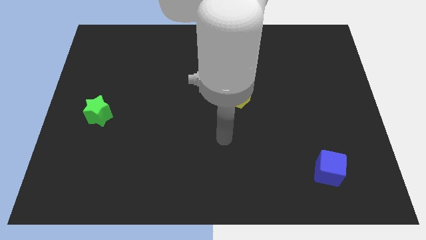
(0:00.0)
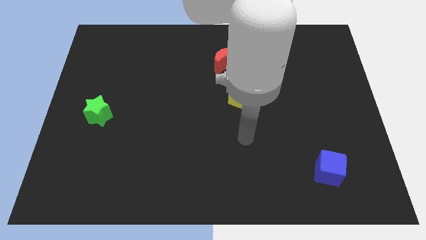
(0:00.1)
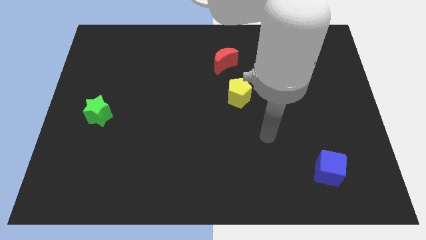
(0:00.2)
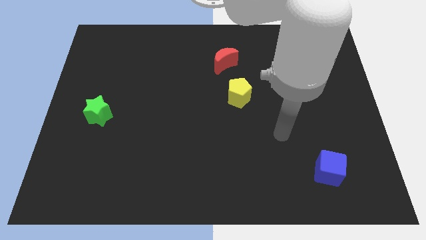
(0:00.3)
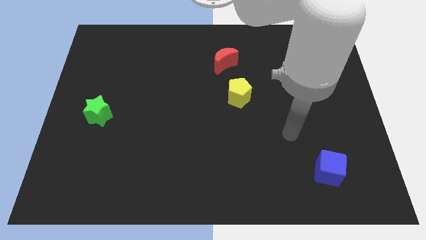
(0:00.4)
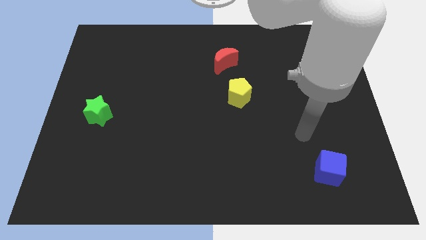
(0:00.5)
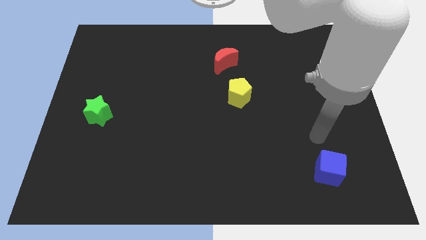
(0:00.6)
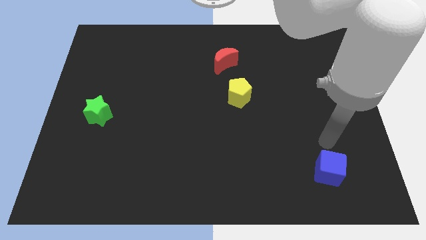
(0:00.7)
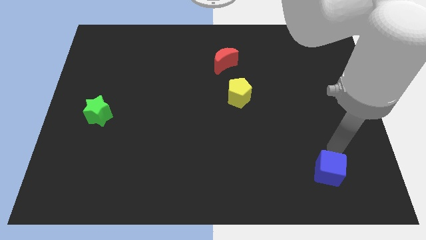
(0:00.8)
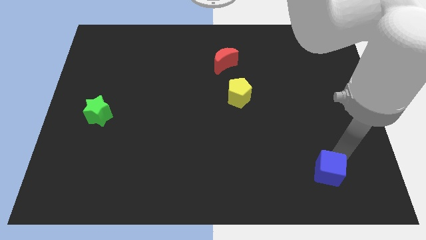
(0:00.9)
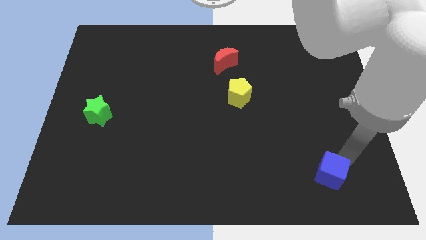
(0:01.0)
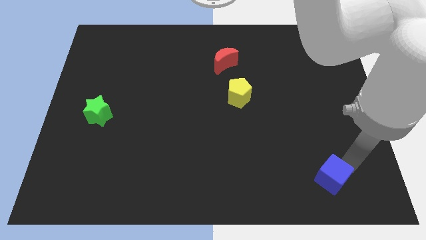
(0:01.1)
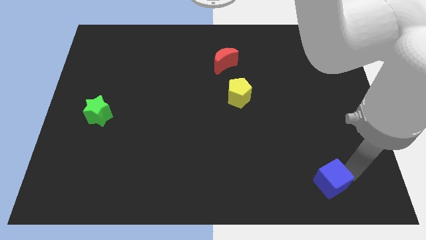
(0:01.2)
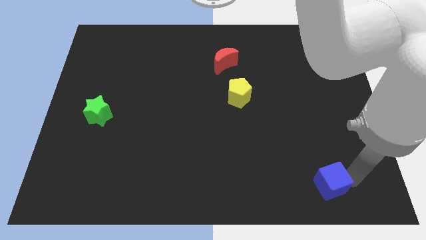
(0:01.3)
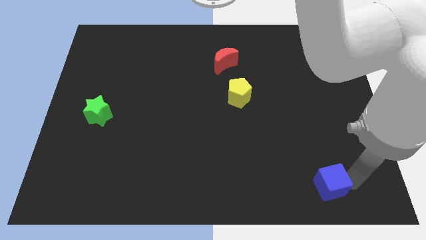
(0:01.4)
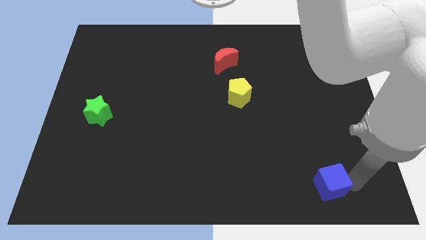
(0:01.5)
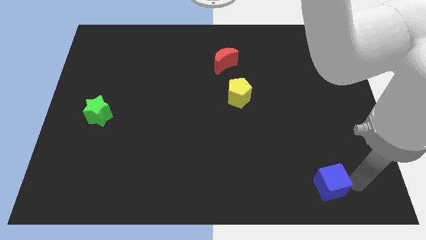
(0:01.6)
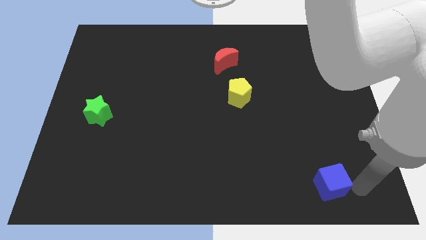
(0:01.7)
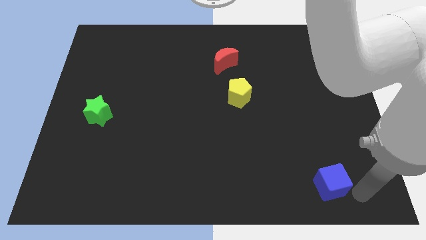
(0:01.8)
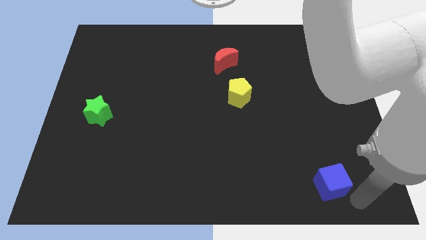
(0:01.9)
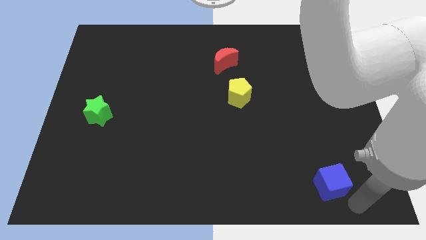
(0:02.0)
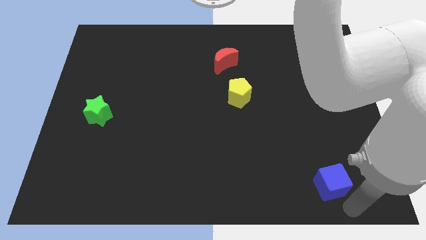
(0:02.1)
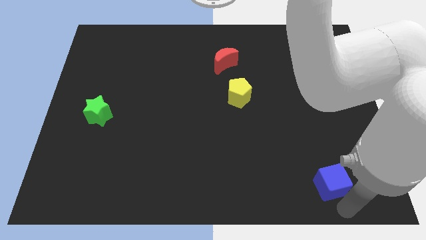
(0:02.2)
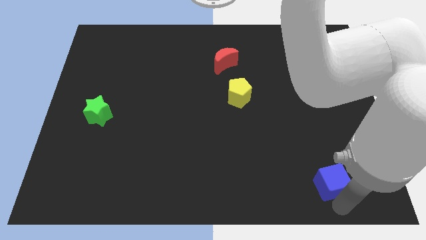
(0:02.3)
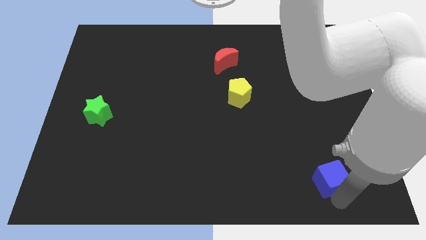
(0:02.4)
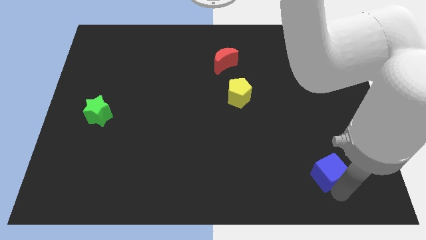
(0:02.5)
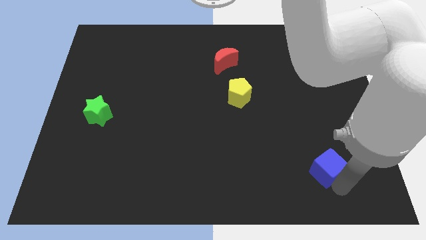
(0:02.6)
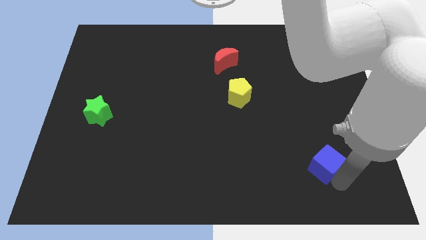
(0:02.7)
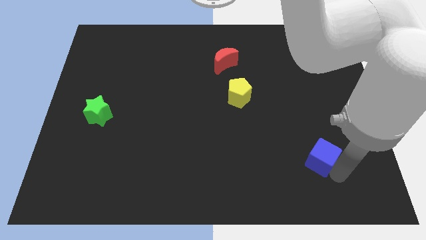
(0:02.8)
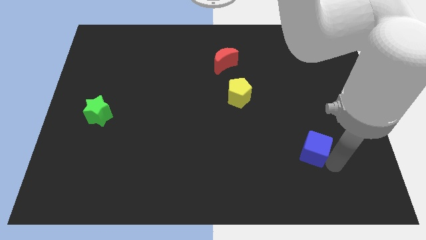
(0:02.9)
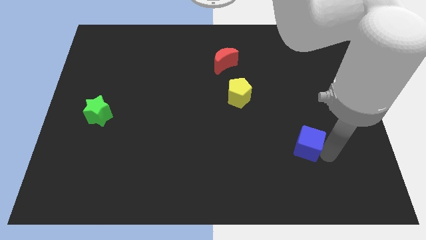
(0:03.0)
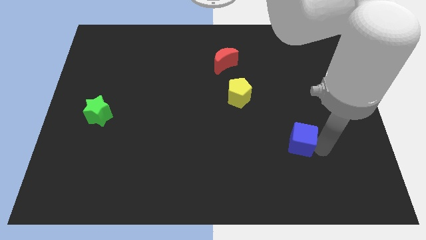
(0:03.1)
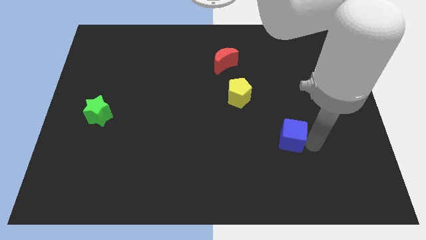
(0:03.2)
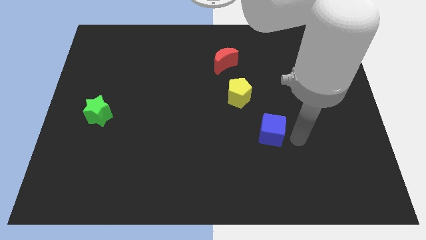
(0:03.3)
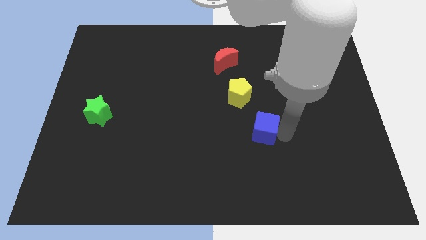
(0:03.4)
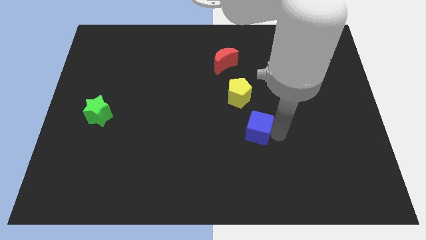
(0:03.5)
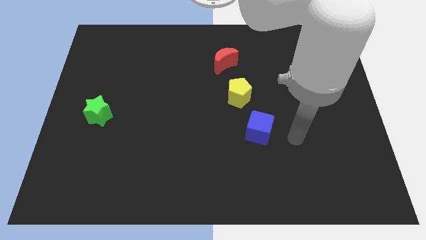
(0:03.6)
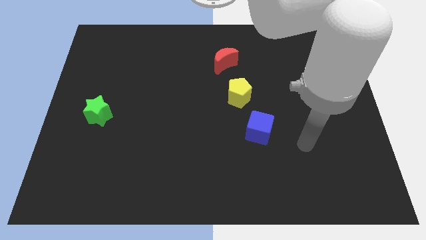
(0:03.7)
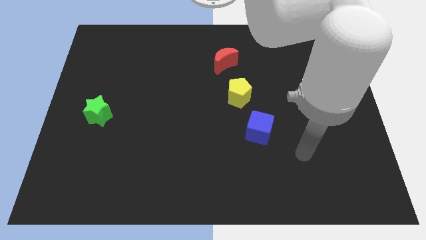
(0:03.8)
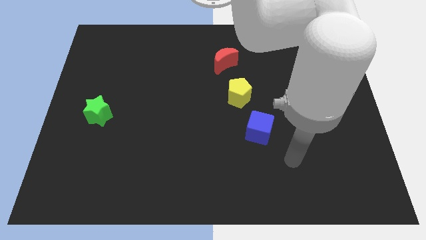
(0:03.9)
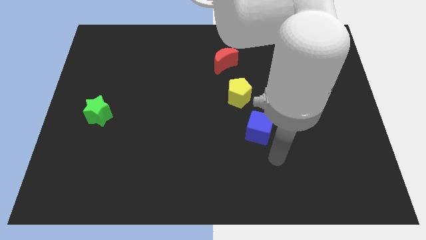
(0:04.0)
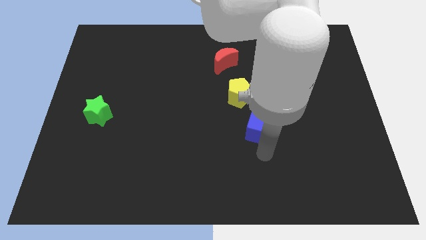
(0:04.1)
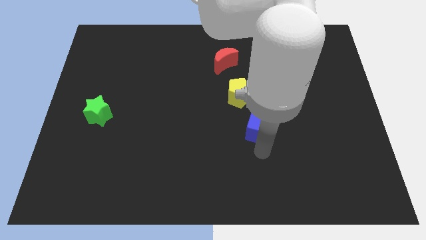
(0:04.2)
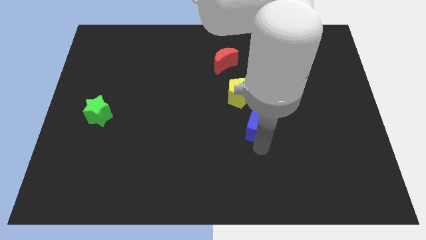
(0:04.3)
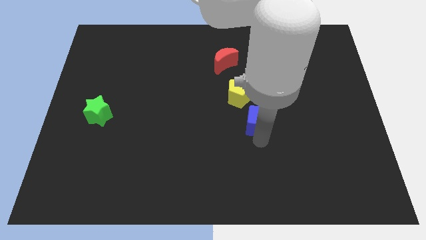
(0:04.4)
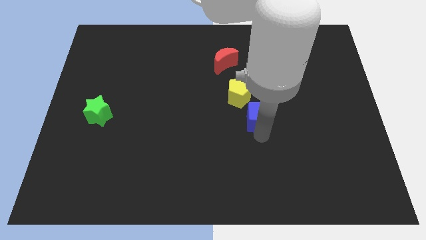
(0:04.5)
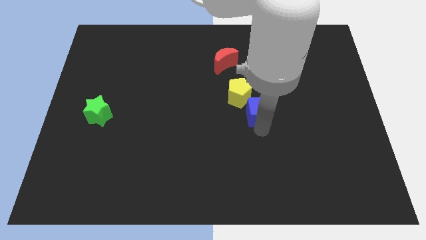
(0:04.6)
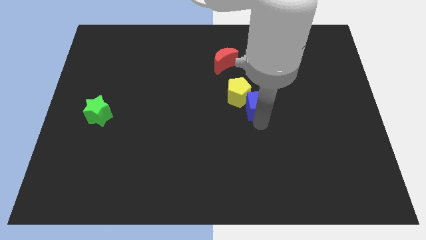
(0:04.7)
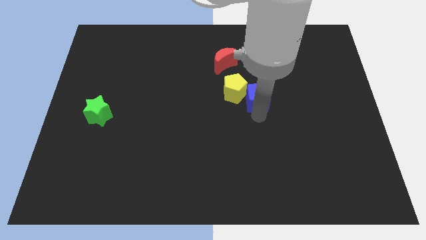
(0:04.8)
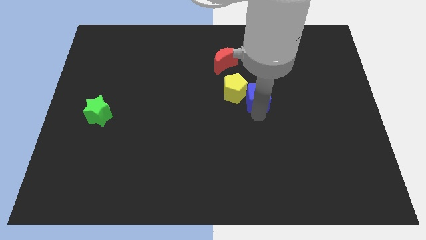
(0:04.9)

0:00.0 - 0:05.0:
push the blue block towards the yellow block

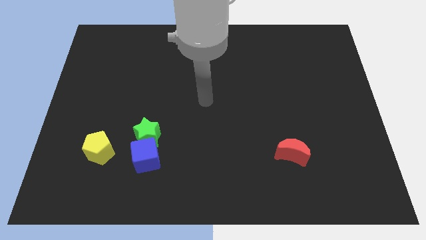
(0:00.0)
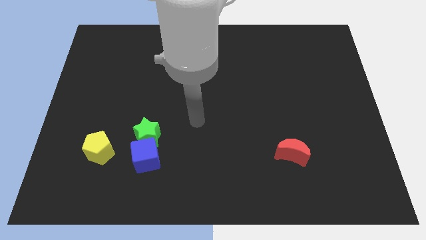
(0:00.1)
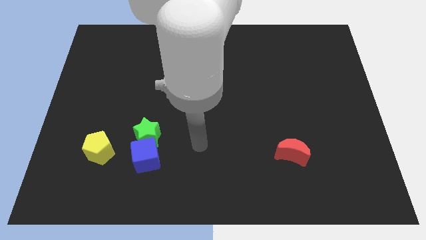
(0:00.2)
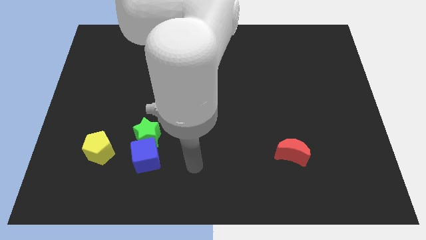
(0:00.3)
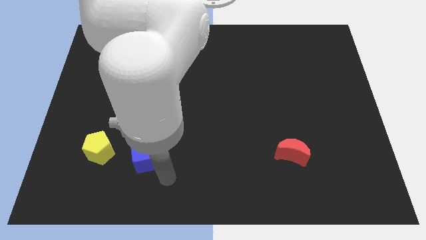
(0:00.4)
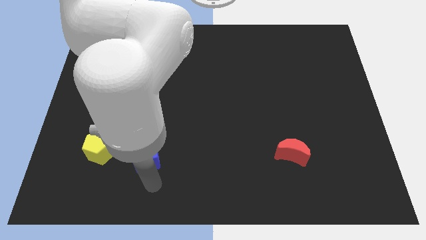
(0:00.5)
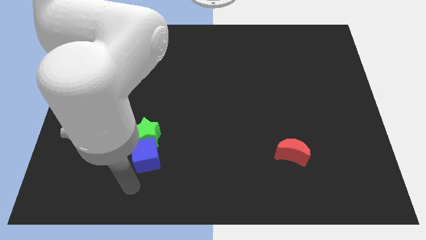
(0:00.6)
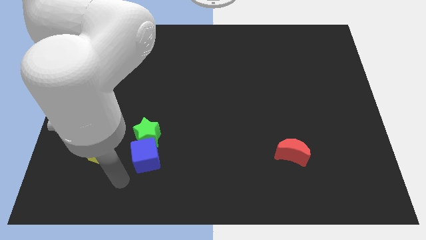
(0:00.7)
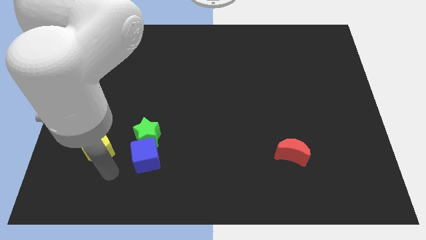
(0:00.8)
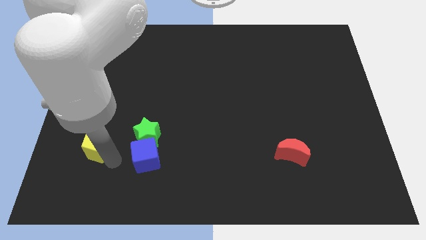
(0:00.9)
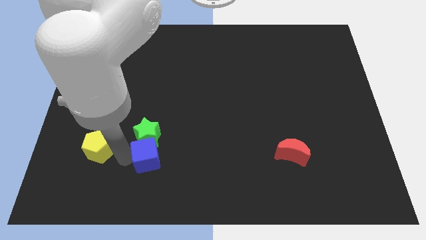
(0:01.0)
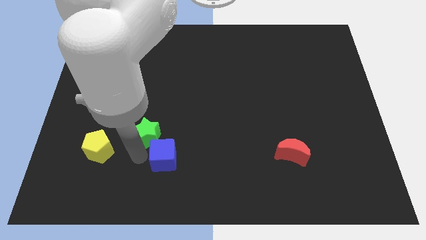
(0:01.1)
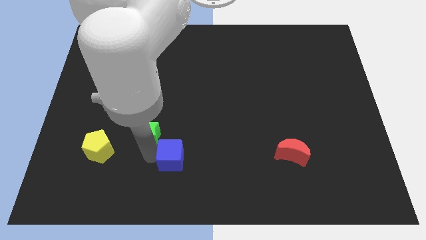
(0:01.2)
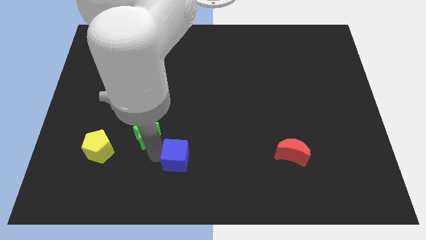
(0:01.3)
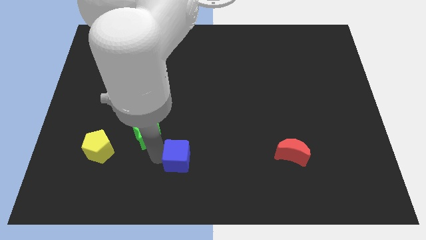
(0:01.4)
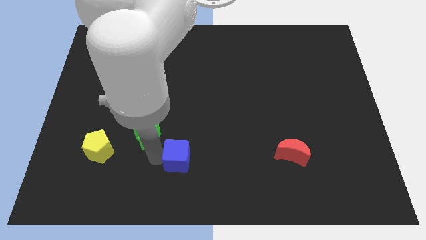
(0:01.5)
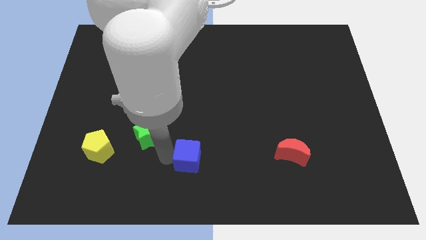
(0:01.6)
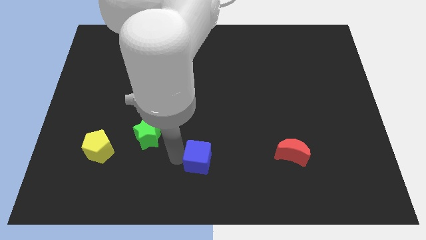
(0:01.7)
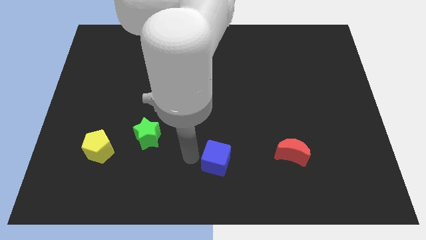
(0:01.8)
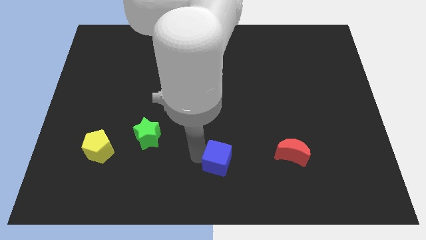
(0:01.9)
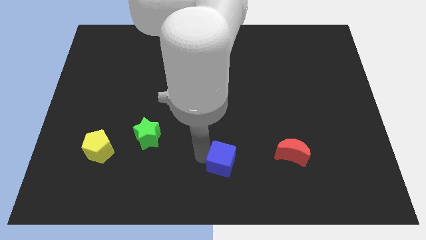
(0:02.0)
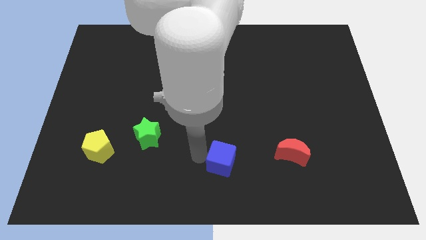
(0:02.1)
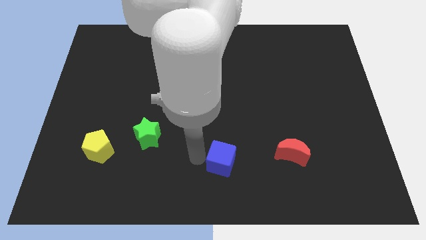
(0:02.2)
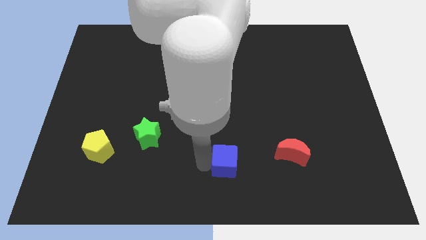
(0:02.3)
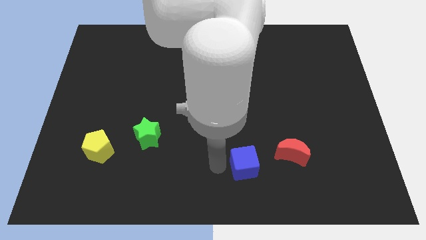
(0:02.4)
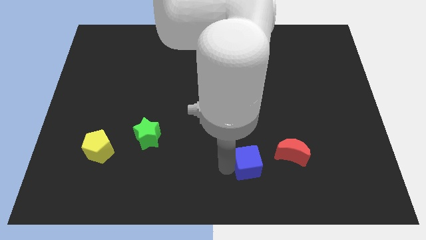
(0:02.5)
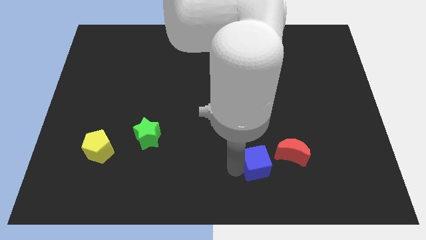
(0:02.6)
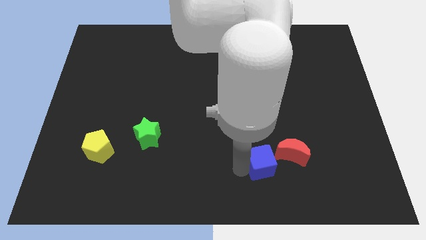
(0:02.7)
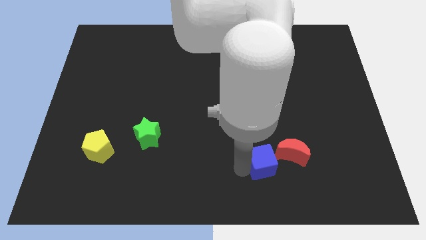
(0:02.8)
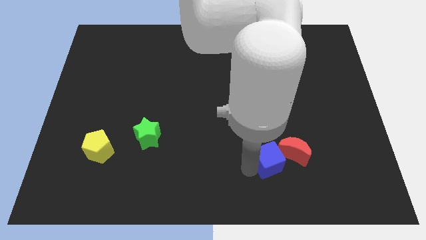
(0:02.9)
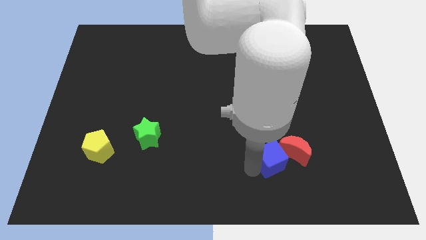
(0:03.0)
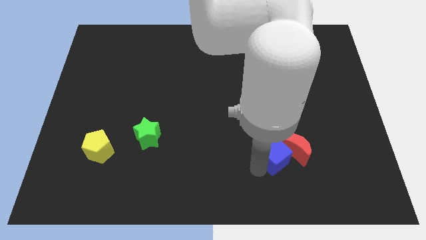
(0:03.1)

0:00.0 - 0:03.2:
push the blue block next to the moon

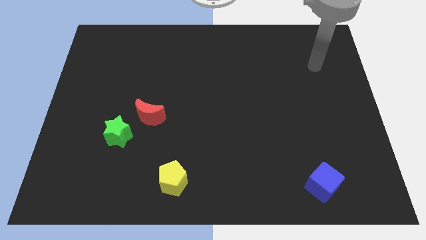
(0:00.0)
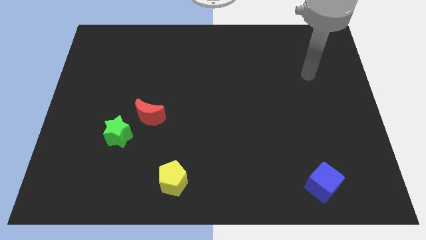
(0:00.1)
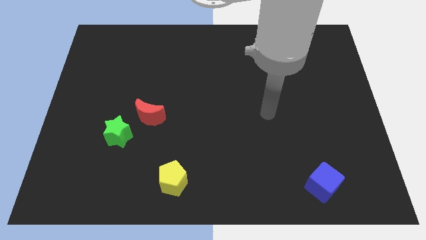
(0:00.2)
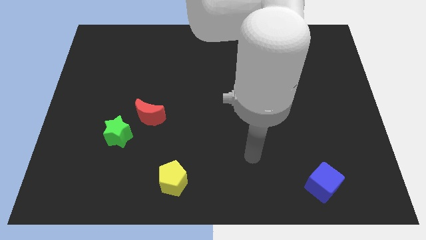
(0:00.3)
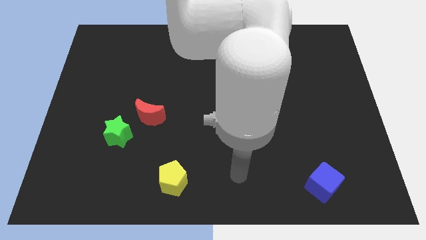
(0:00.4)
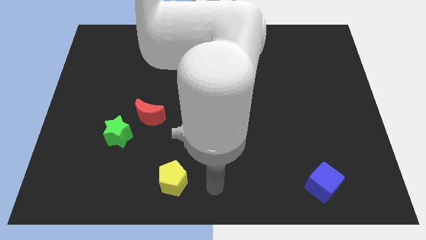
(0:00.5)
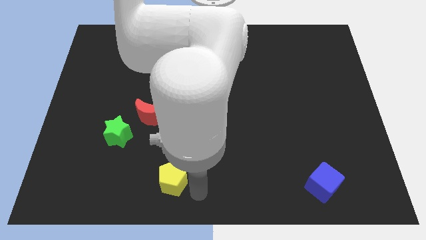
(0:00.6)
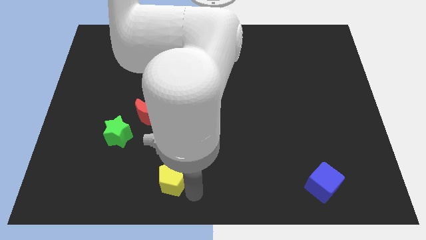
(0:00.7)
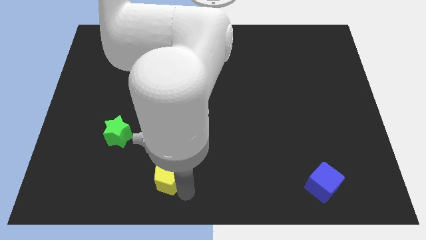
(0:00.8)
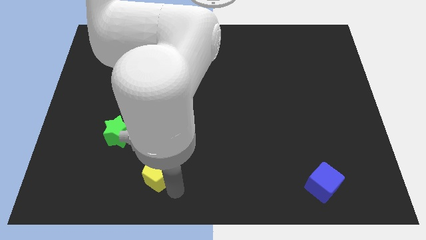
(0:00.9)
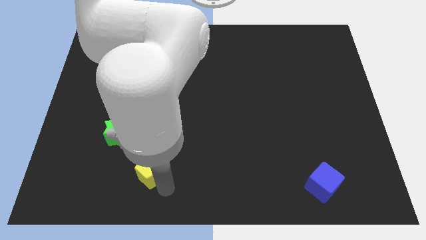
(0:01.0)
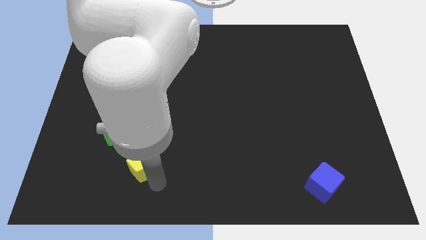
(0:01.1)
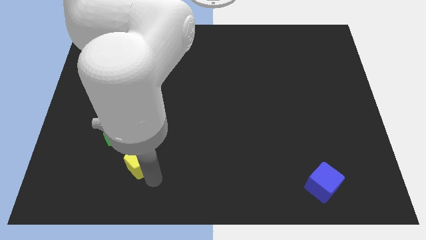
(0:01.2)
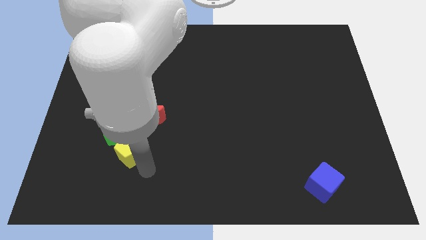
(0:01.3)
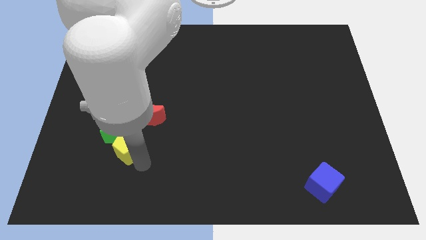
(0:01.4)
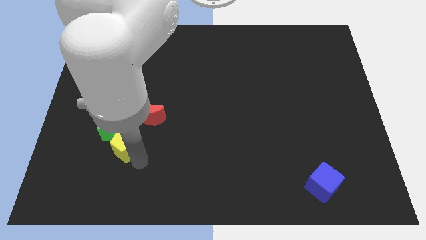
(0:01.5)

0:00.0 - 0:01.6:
put the pentagon to the green star
